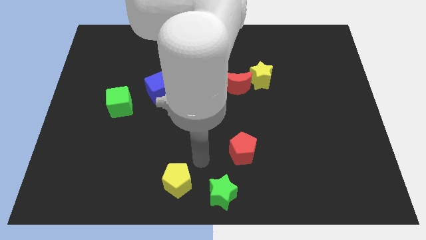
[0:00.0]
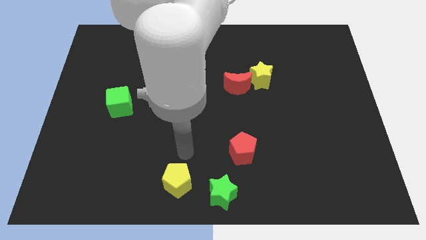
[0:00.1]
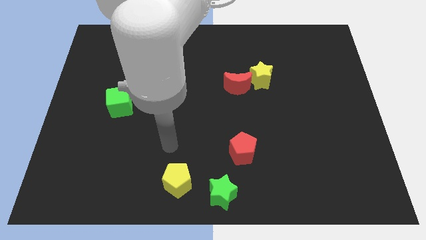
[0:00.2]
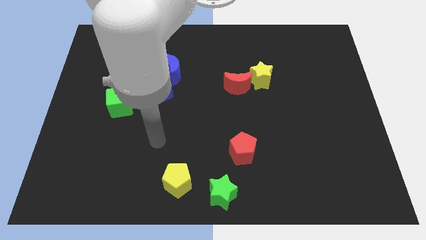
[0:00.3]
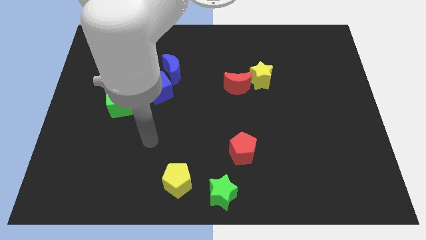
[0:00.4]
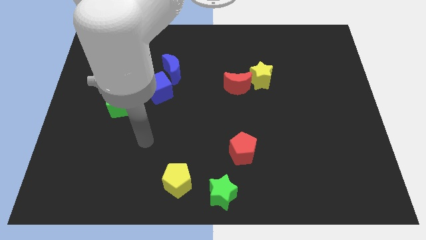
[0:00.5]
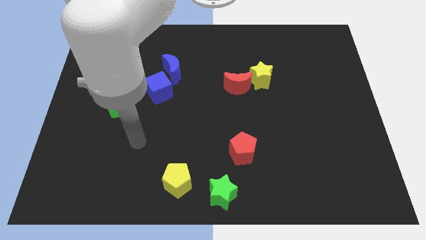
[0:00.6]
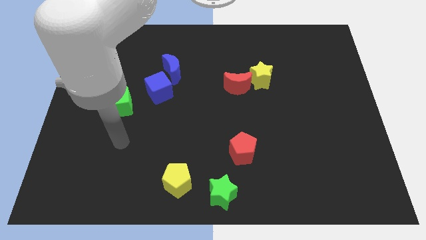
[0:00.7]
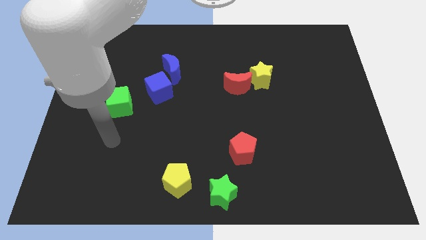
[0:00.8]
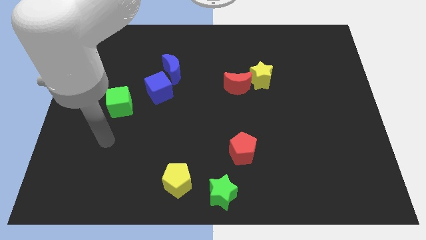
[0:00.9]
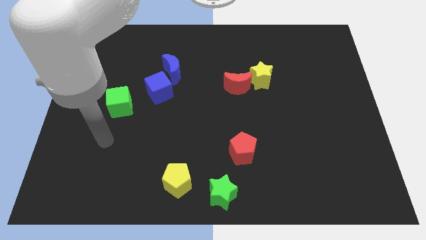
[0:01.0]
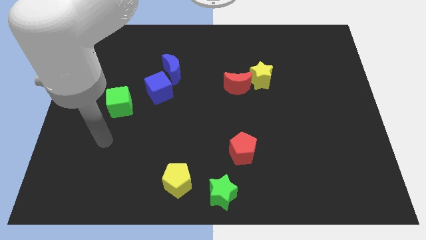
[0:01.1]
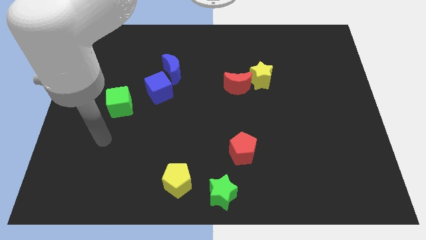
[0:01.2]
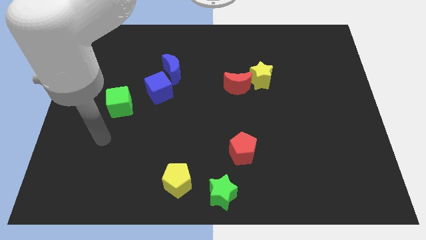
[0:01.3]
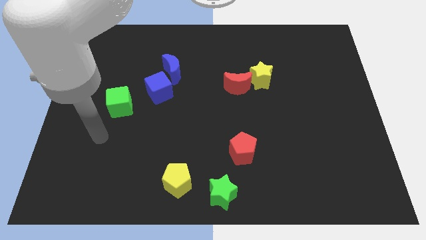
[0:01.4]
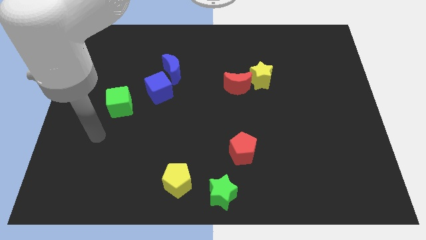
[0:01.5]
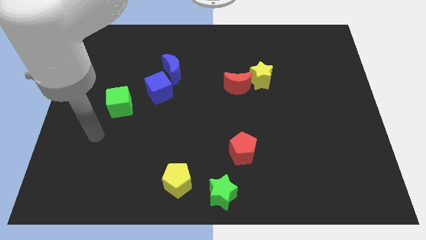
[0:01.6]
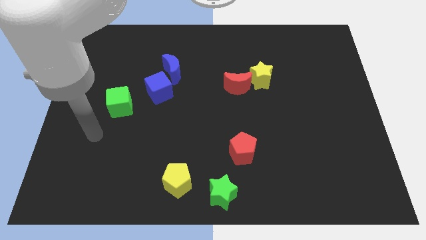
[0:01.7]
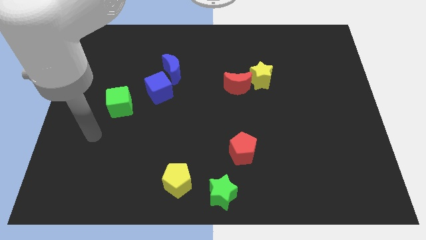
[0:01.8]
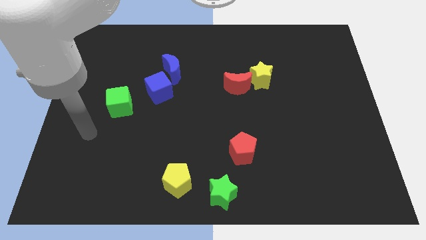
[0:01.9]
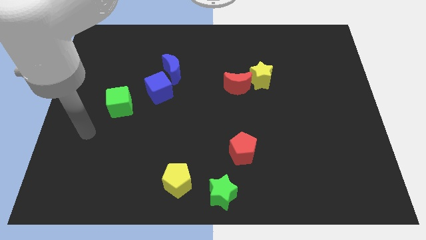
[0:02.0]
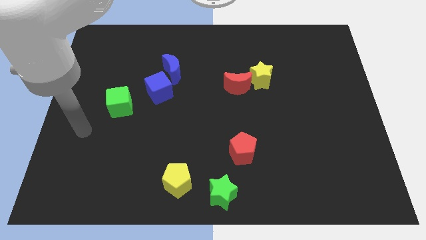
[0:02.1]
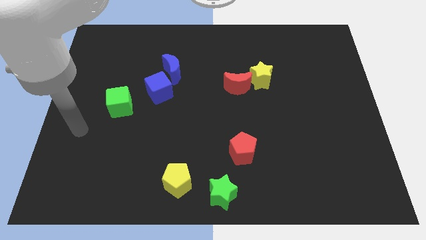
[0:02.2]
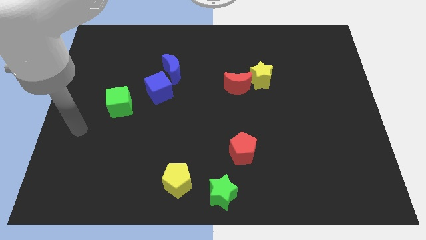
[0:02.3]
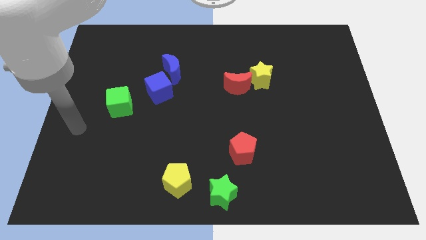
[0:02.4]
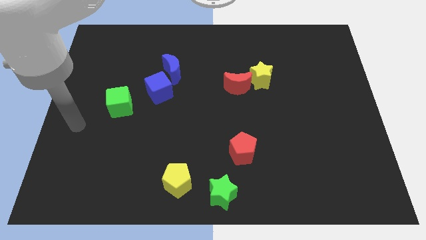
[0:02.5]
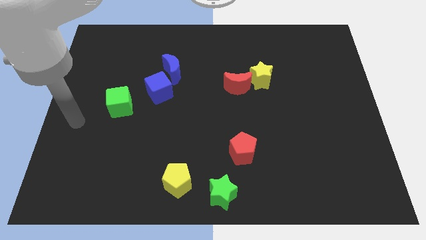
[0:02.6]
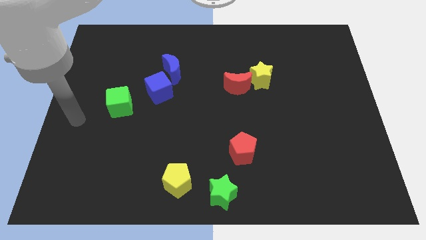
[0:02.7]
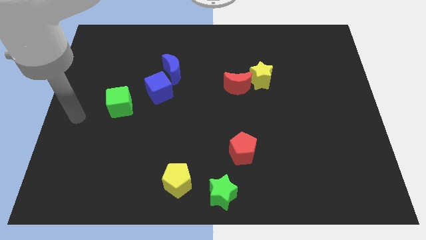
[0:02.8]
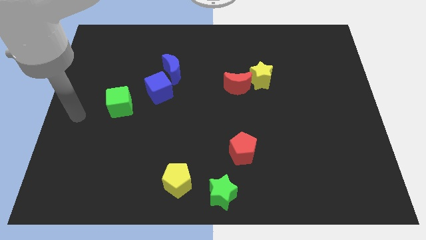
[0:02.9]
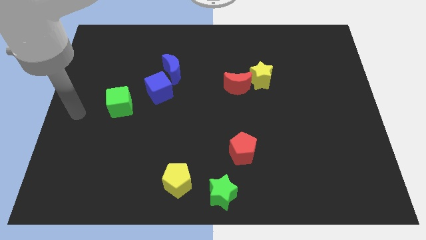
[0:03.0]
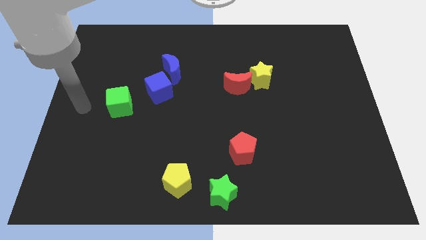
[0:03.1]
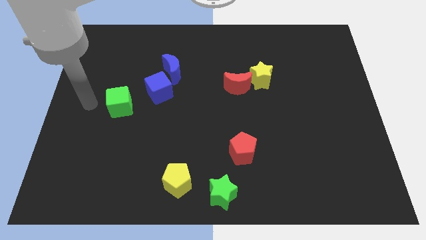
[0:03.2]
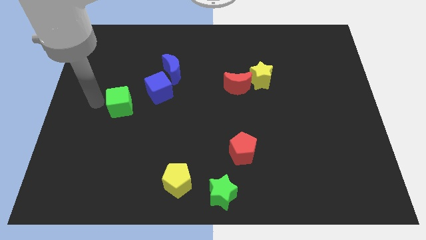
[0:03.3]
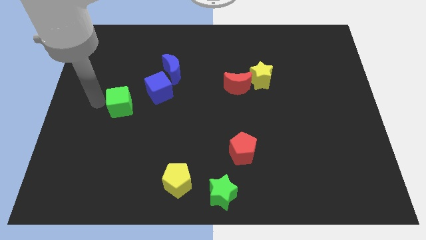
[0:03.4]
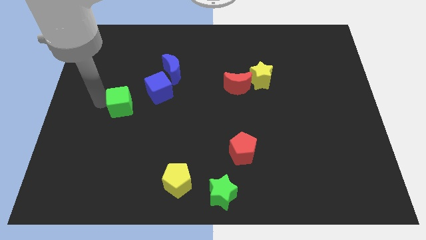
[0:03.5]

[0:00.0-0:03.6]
place the arm left to the green cube

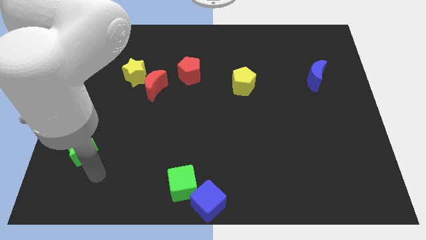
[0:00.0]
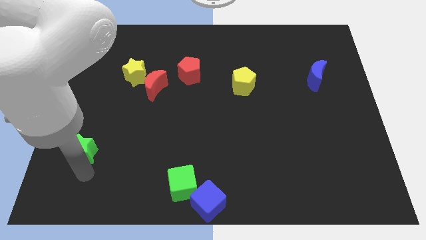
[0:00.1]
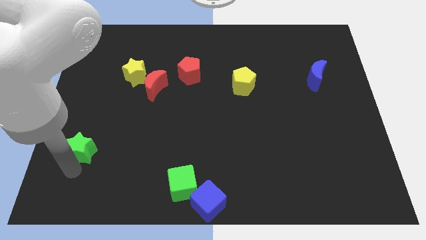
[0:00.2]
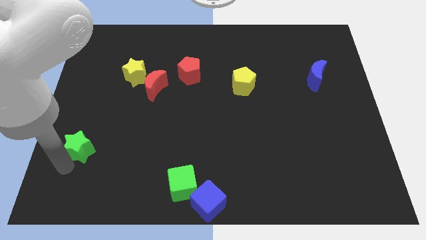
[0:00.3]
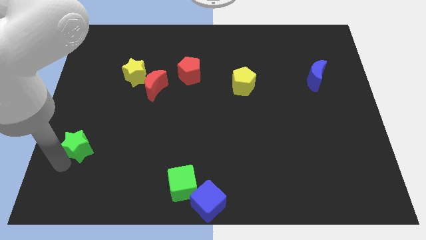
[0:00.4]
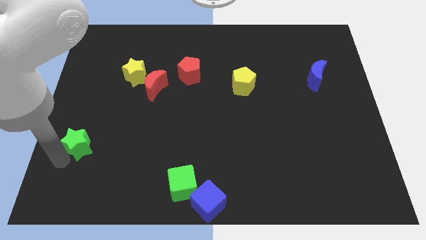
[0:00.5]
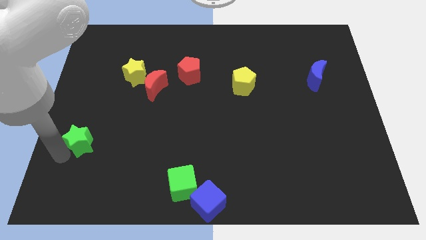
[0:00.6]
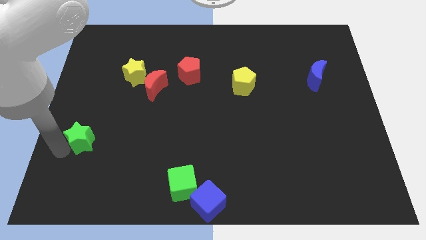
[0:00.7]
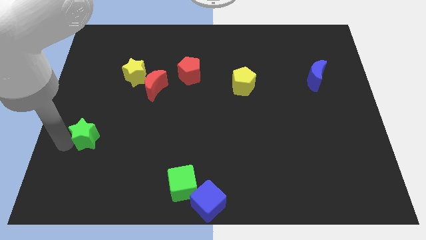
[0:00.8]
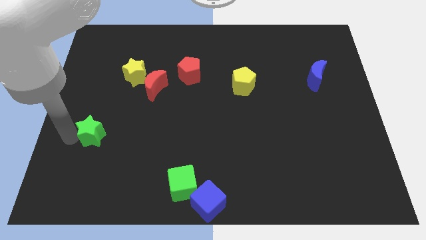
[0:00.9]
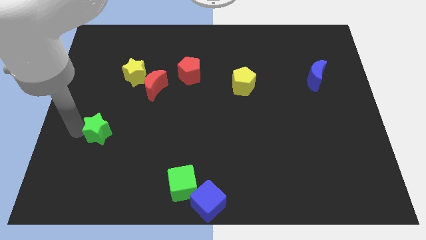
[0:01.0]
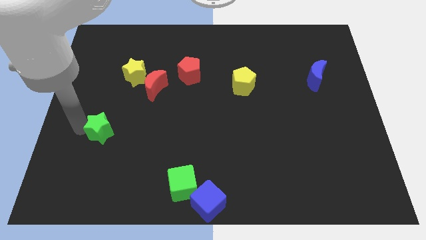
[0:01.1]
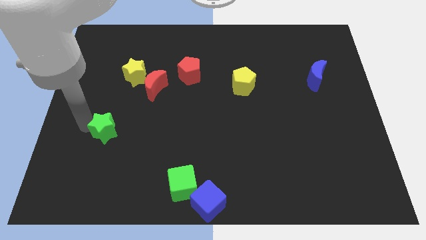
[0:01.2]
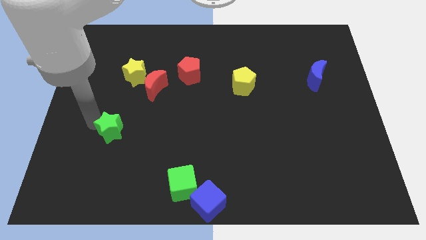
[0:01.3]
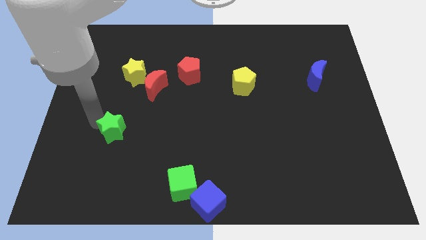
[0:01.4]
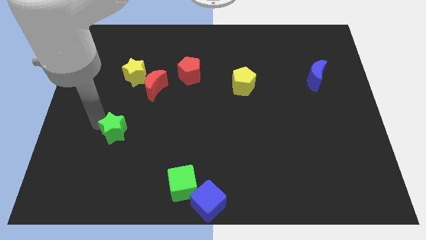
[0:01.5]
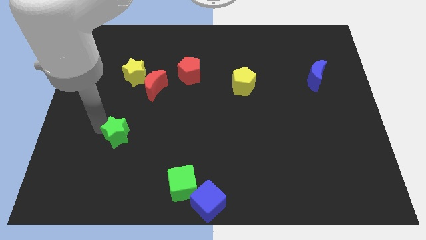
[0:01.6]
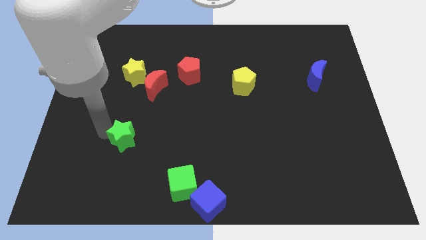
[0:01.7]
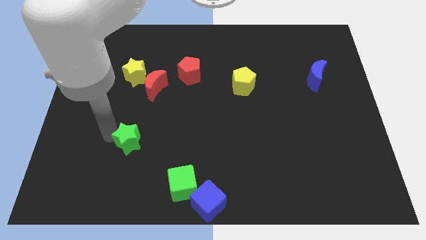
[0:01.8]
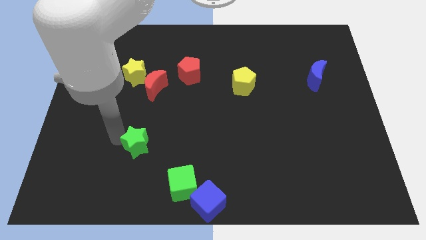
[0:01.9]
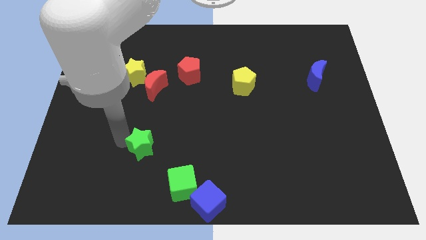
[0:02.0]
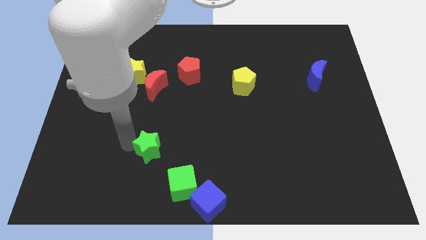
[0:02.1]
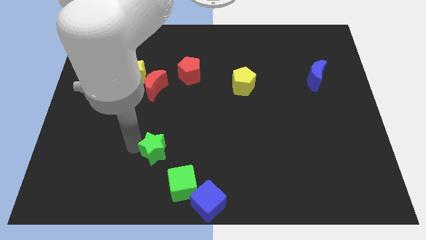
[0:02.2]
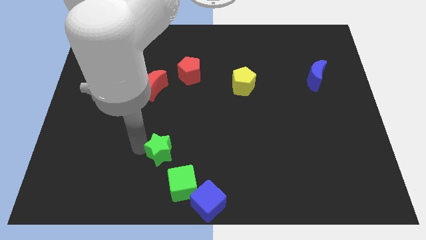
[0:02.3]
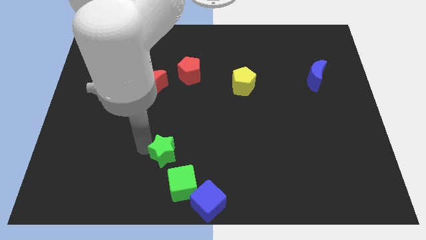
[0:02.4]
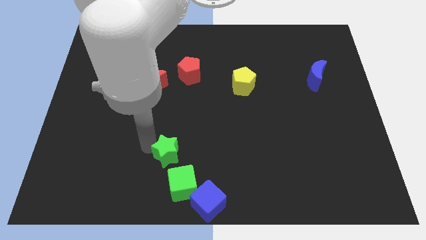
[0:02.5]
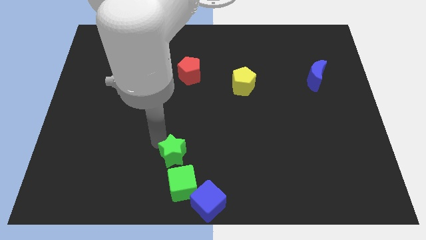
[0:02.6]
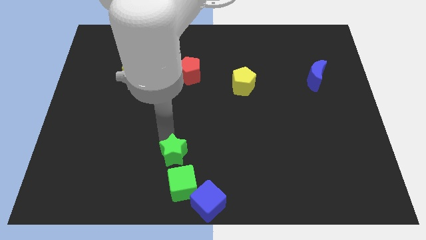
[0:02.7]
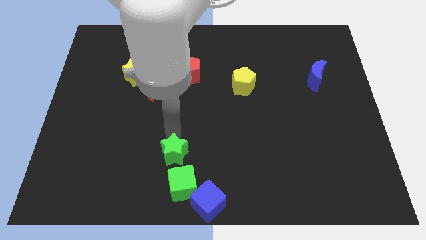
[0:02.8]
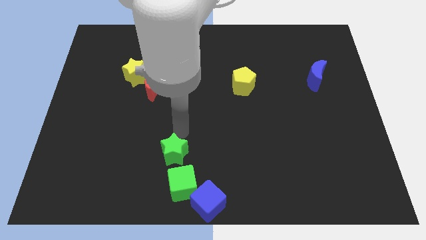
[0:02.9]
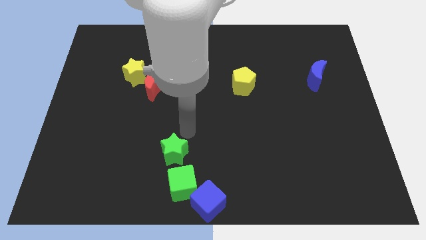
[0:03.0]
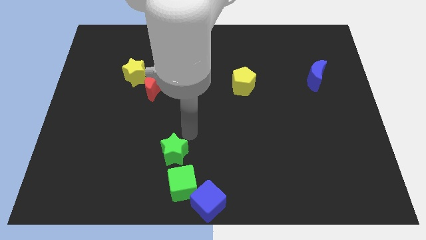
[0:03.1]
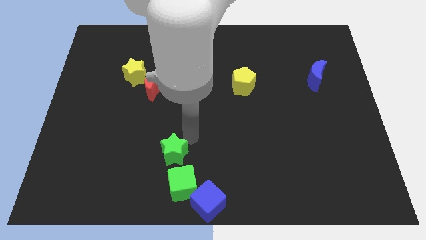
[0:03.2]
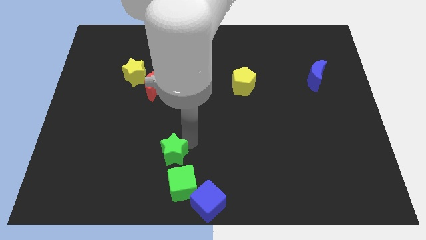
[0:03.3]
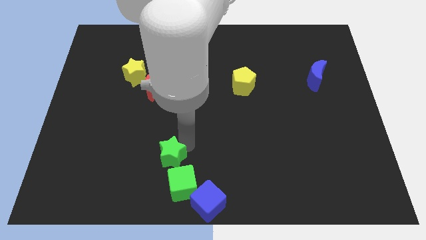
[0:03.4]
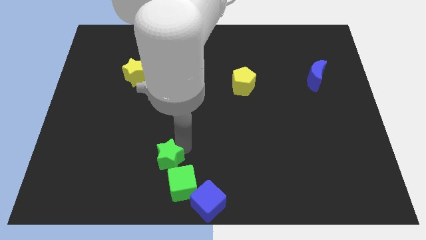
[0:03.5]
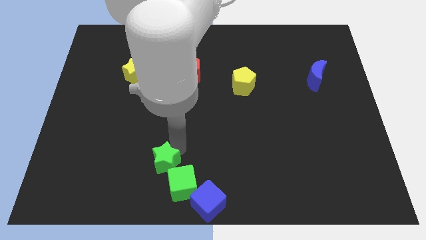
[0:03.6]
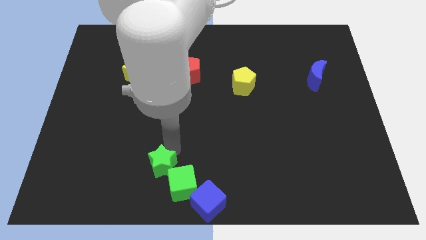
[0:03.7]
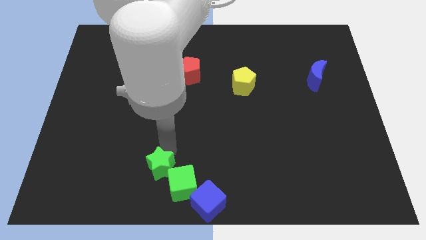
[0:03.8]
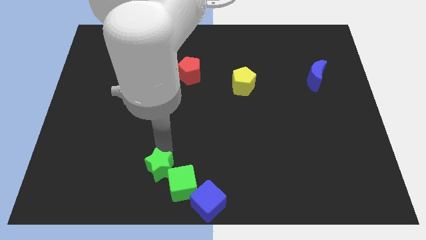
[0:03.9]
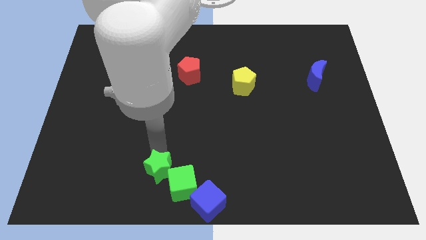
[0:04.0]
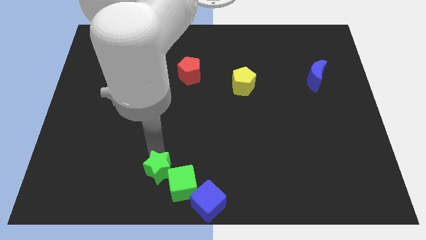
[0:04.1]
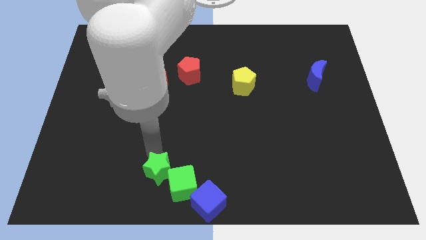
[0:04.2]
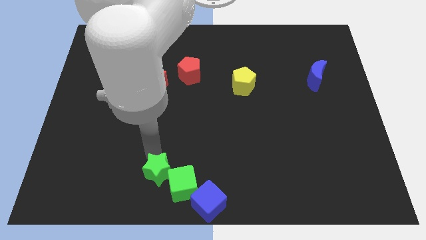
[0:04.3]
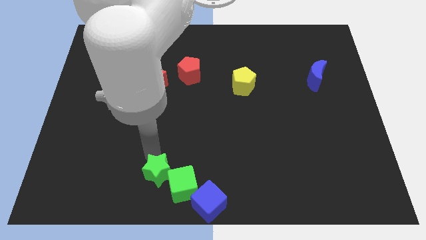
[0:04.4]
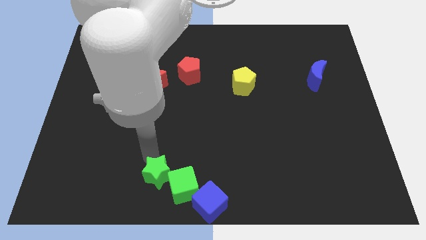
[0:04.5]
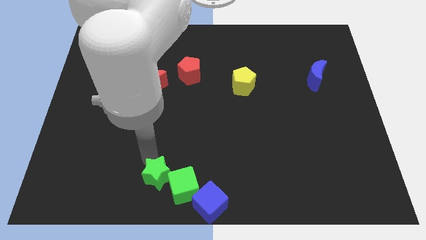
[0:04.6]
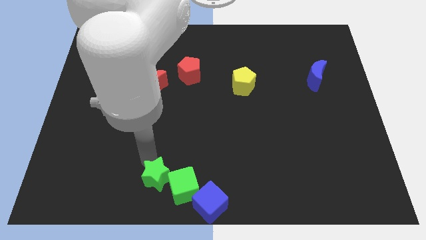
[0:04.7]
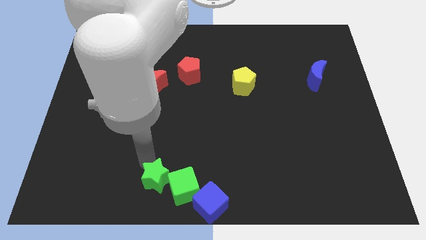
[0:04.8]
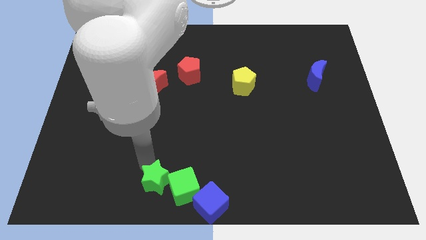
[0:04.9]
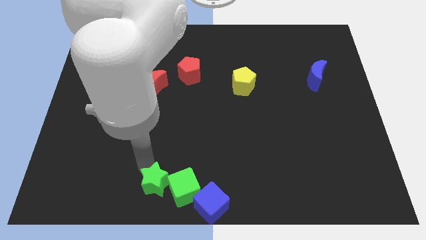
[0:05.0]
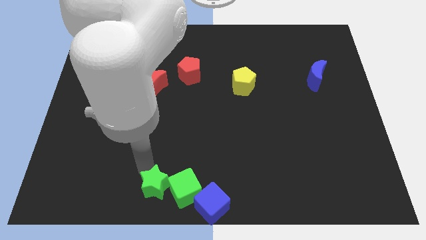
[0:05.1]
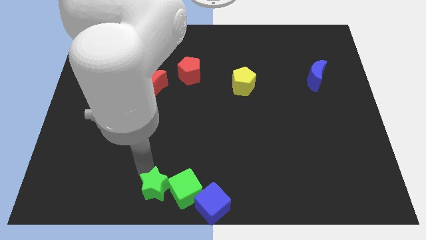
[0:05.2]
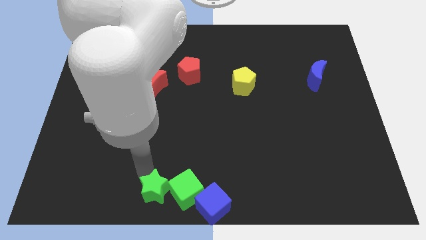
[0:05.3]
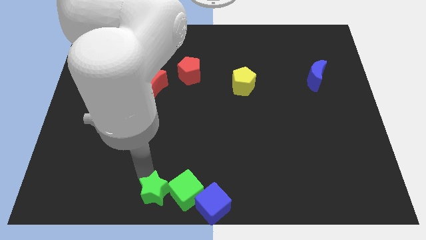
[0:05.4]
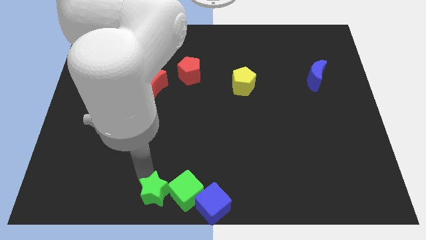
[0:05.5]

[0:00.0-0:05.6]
push the green star left to the green cube
